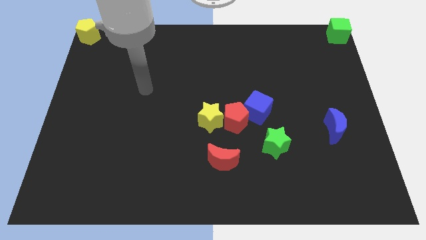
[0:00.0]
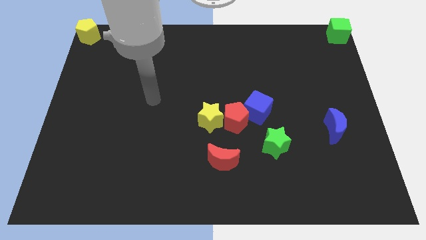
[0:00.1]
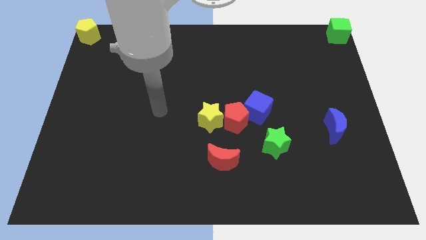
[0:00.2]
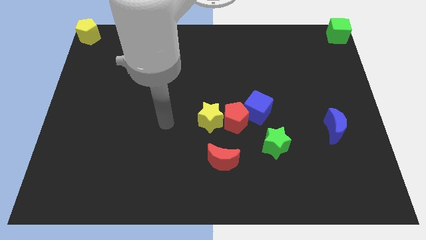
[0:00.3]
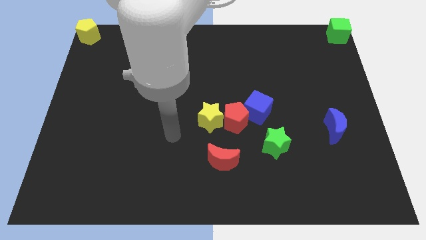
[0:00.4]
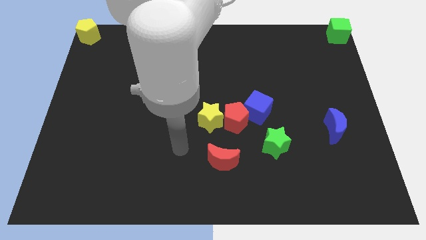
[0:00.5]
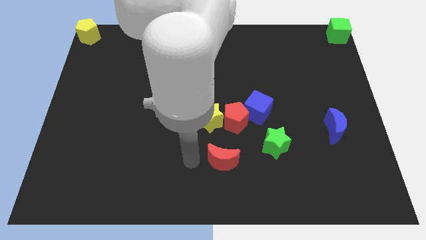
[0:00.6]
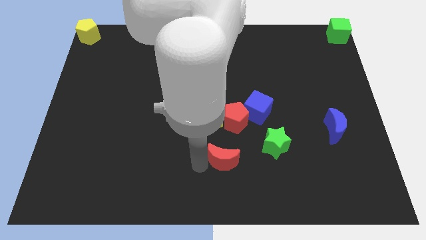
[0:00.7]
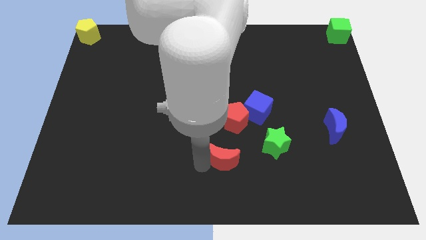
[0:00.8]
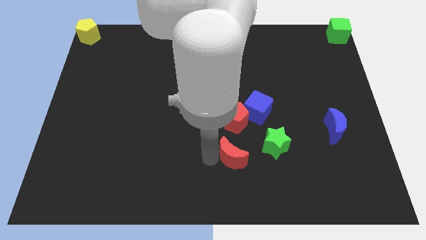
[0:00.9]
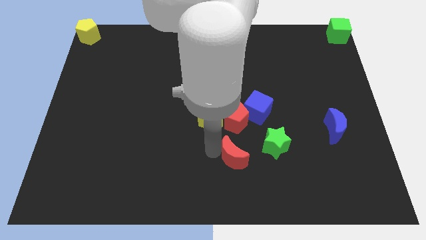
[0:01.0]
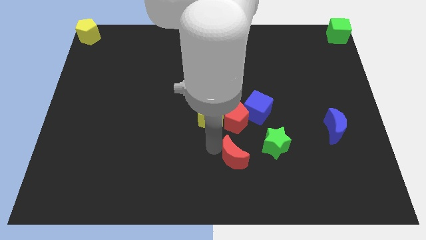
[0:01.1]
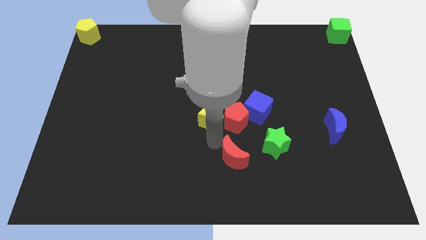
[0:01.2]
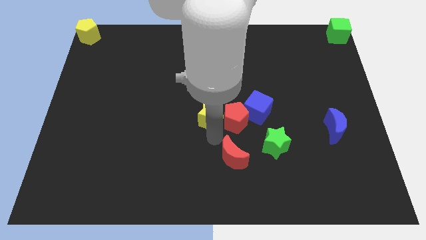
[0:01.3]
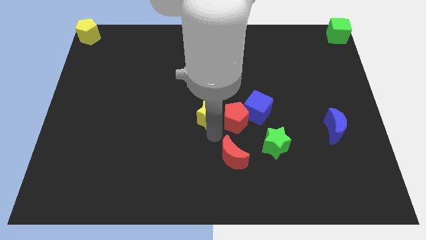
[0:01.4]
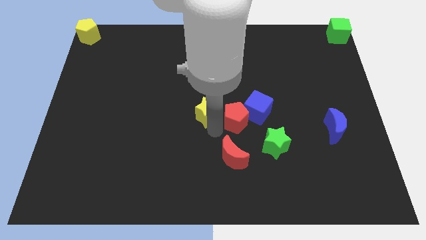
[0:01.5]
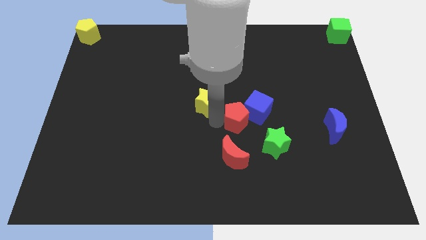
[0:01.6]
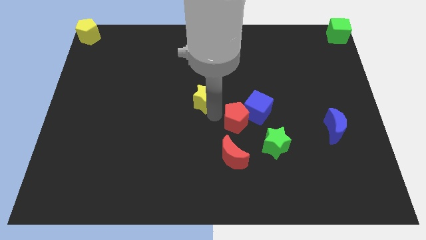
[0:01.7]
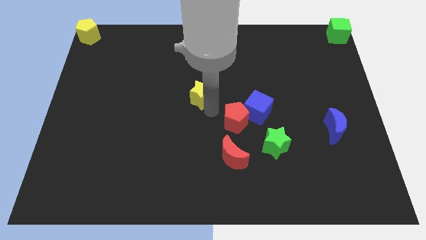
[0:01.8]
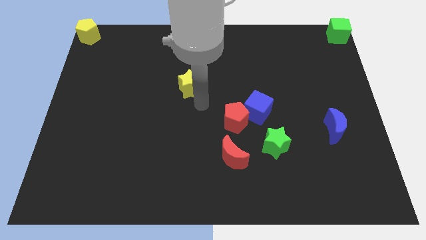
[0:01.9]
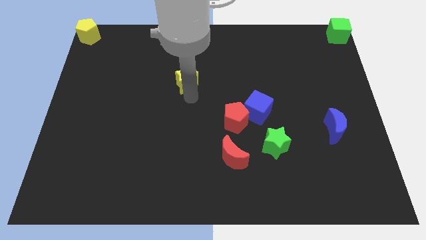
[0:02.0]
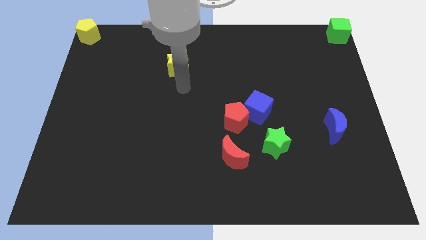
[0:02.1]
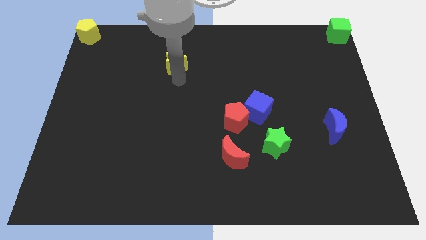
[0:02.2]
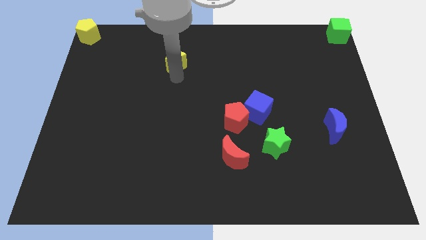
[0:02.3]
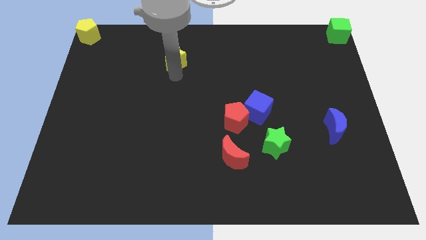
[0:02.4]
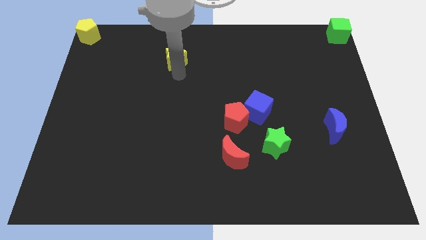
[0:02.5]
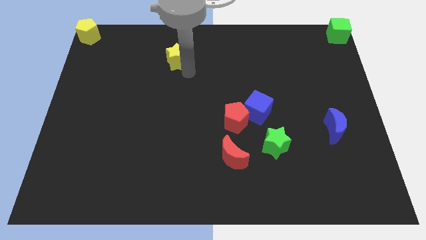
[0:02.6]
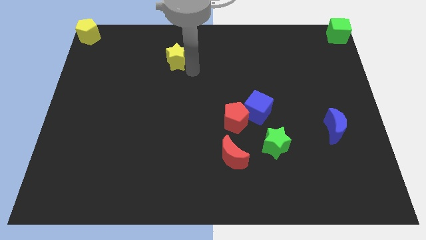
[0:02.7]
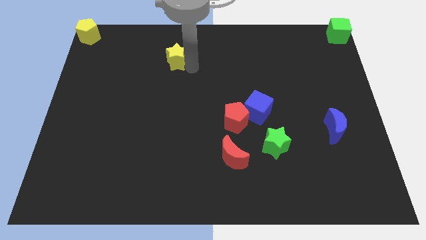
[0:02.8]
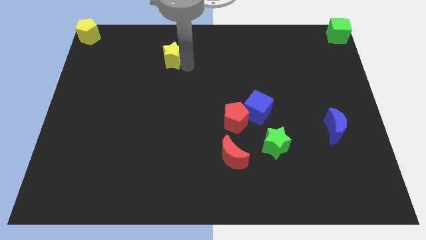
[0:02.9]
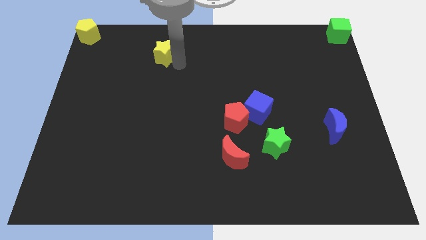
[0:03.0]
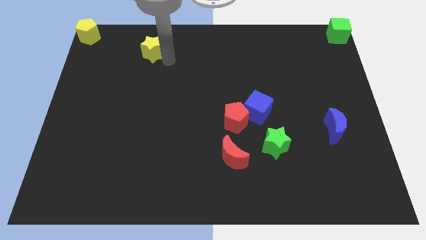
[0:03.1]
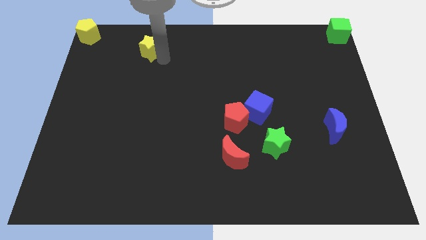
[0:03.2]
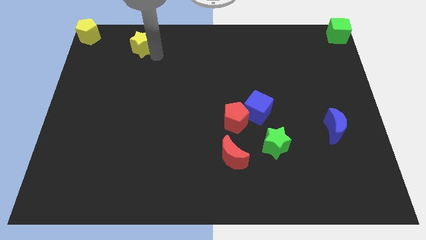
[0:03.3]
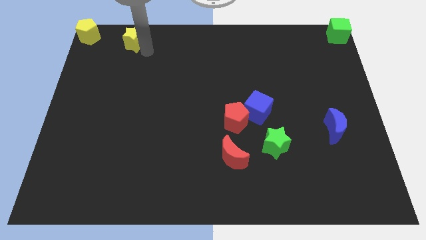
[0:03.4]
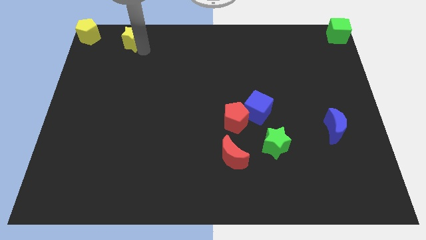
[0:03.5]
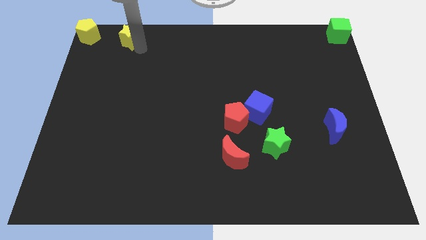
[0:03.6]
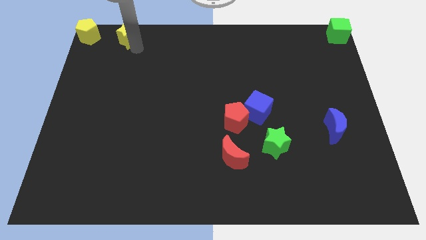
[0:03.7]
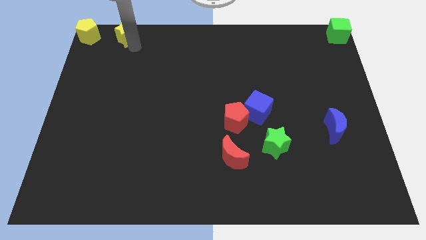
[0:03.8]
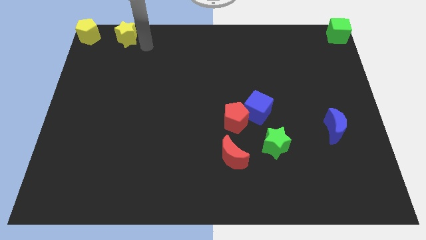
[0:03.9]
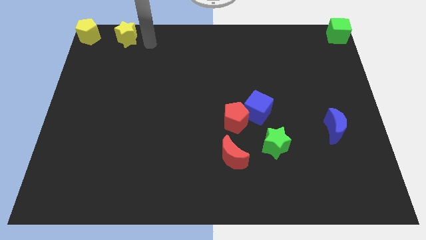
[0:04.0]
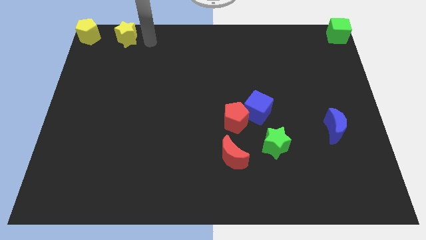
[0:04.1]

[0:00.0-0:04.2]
move the yellow star to the right of the yellow pentagon

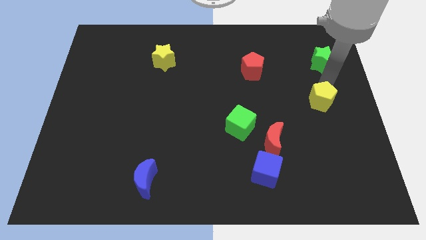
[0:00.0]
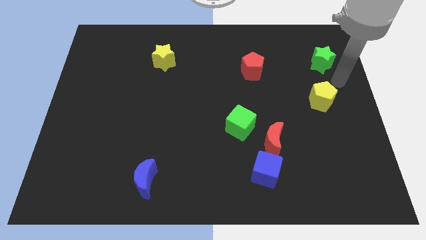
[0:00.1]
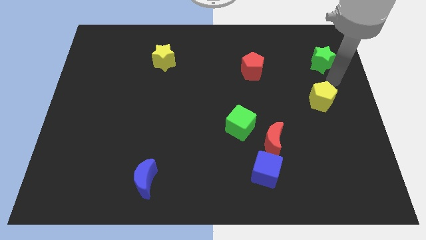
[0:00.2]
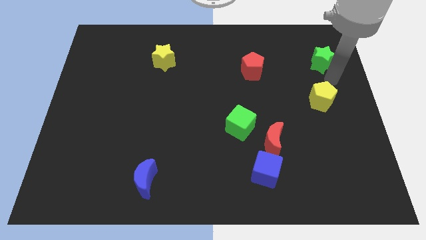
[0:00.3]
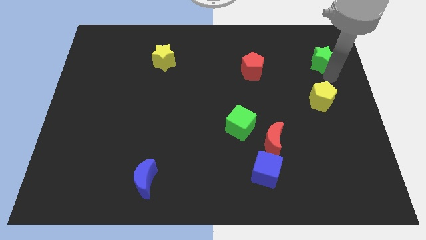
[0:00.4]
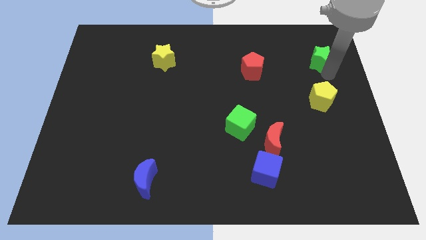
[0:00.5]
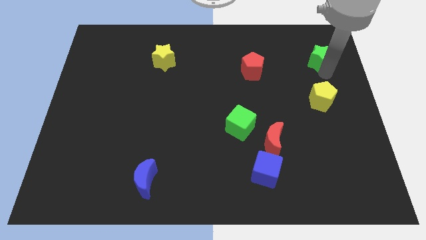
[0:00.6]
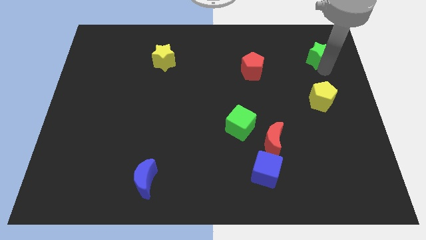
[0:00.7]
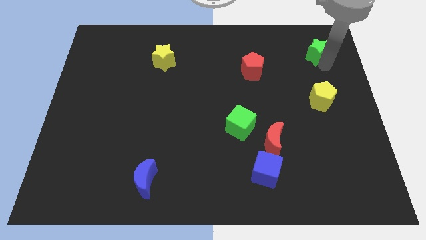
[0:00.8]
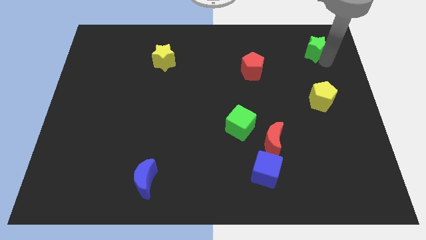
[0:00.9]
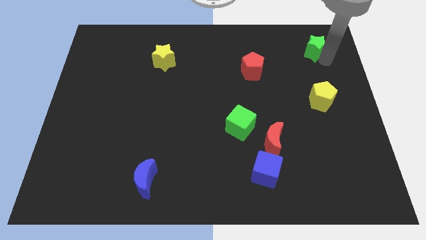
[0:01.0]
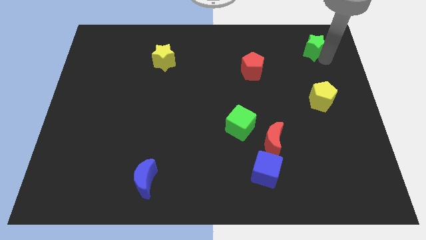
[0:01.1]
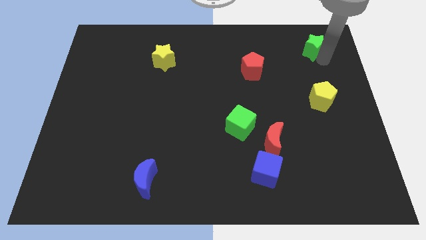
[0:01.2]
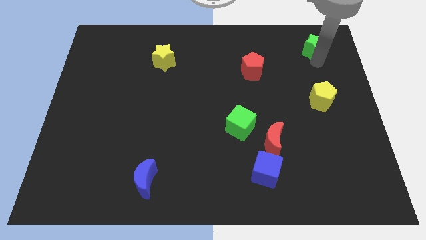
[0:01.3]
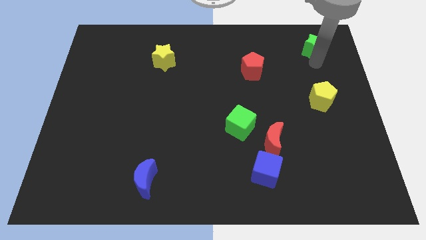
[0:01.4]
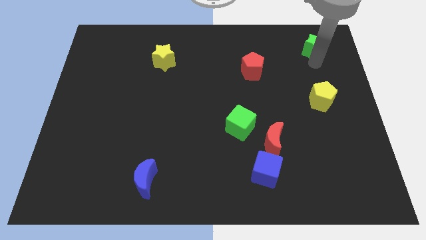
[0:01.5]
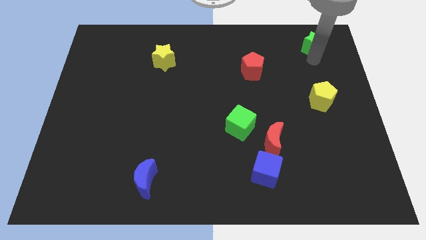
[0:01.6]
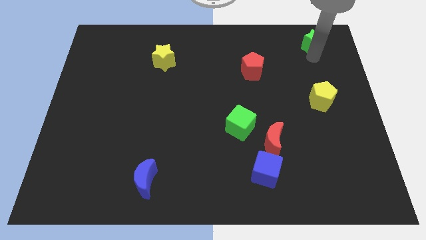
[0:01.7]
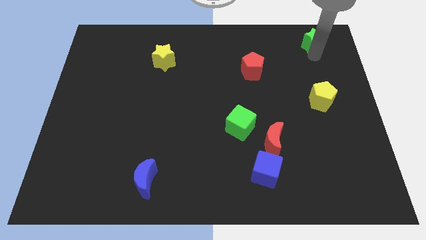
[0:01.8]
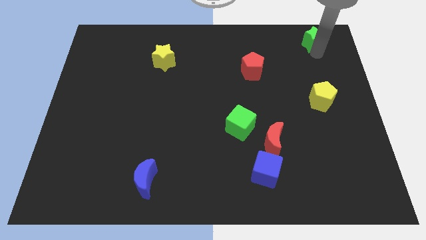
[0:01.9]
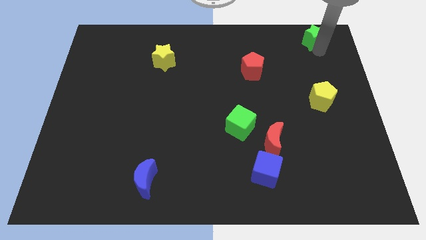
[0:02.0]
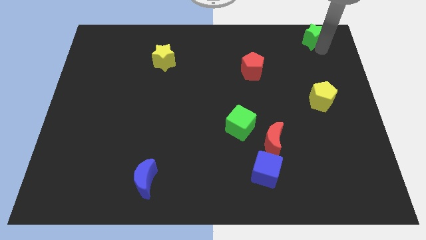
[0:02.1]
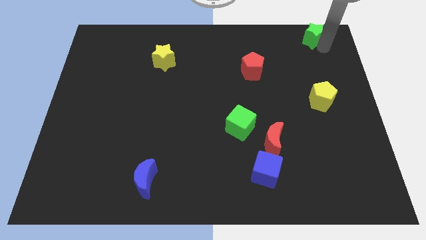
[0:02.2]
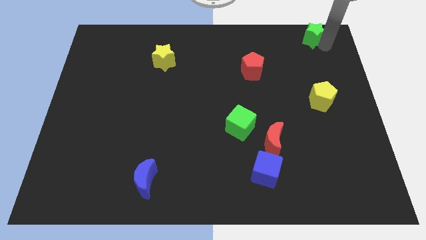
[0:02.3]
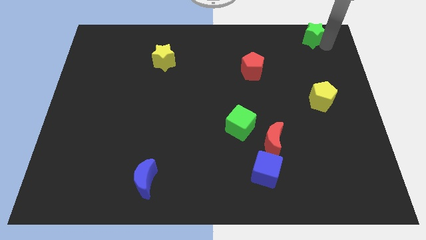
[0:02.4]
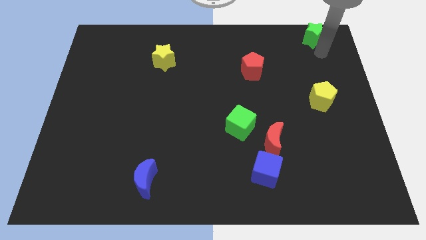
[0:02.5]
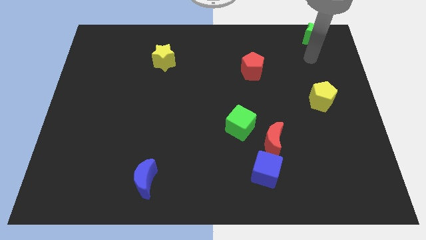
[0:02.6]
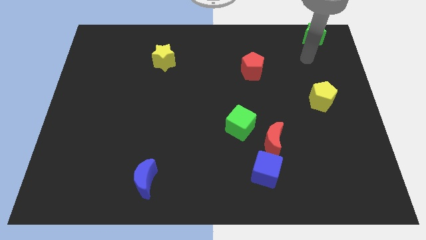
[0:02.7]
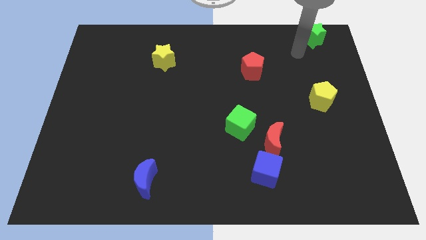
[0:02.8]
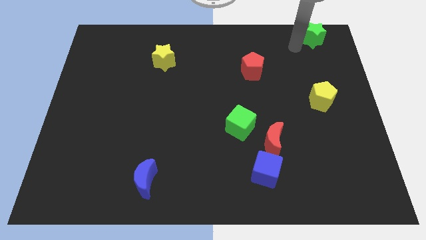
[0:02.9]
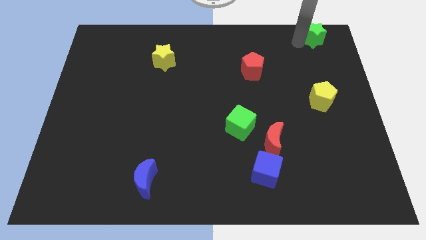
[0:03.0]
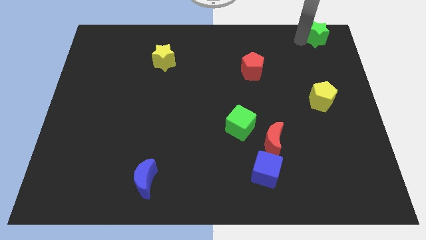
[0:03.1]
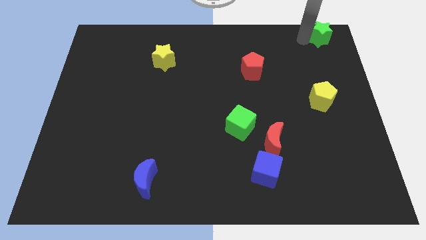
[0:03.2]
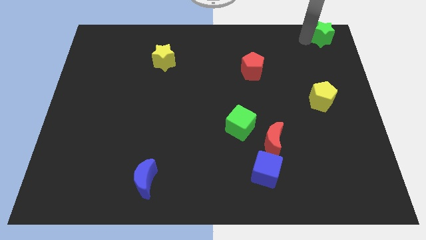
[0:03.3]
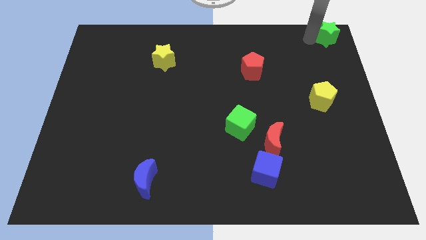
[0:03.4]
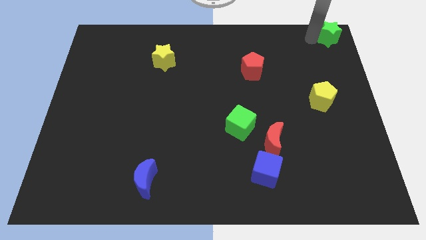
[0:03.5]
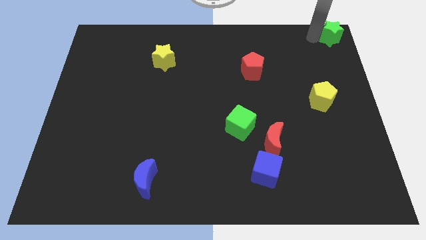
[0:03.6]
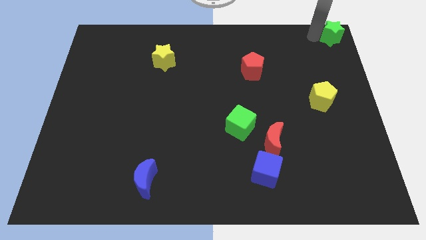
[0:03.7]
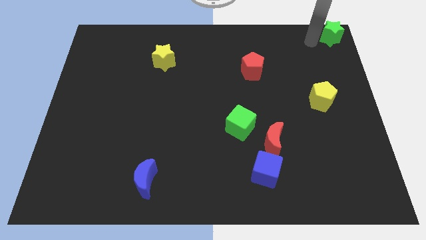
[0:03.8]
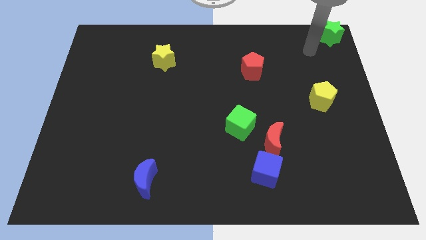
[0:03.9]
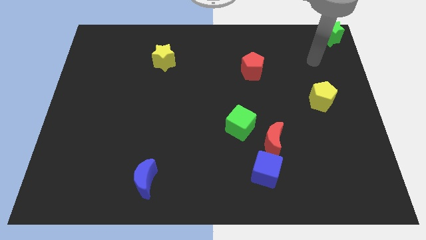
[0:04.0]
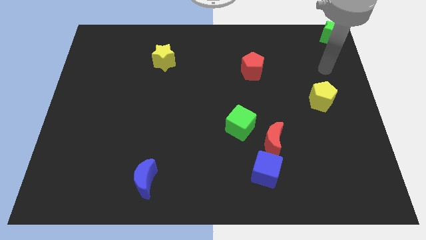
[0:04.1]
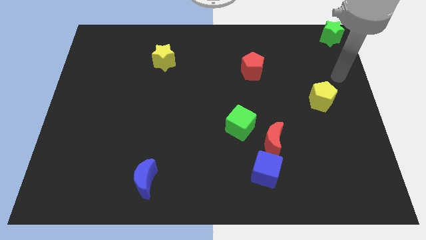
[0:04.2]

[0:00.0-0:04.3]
place the green star to the top right

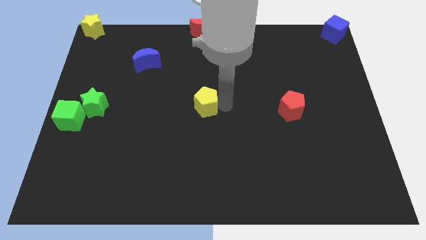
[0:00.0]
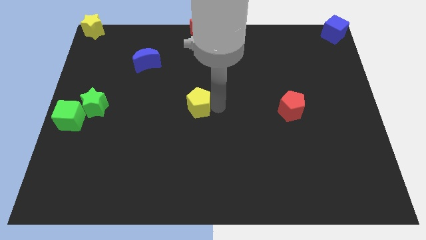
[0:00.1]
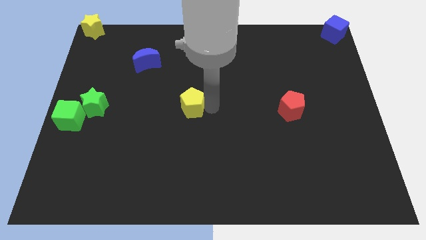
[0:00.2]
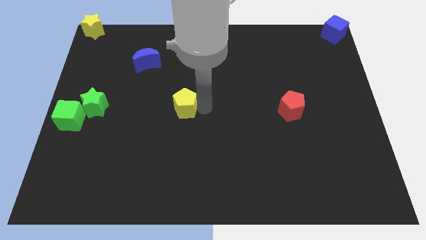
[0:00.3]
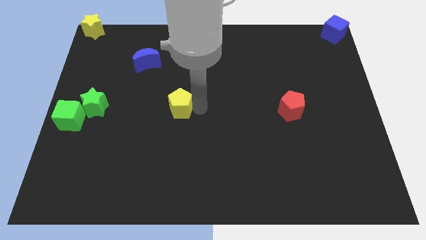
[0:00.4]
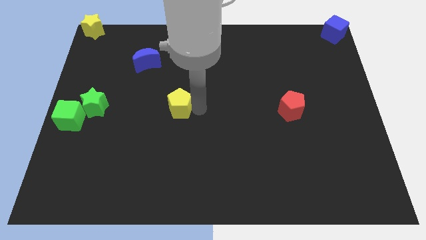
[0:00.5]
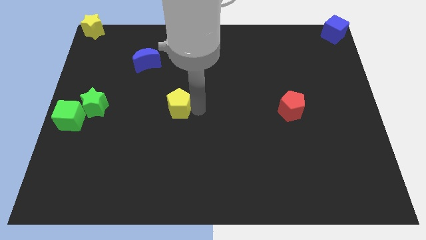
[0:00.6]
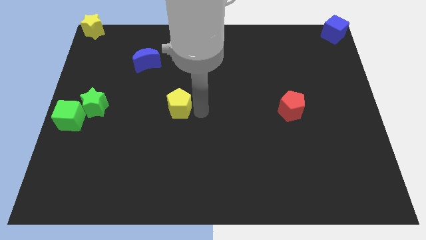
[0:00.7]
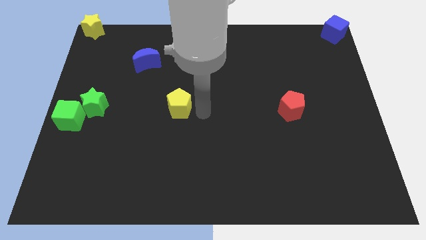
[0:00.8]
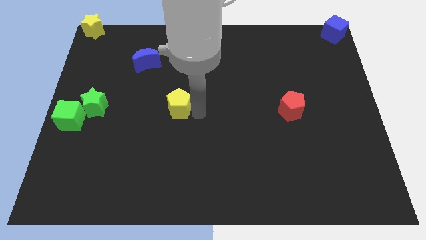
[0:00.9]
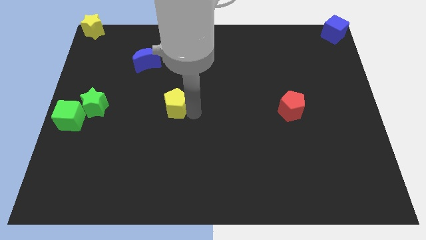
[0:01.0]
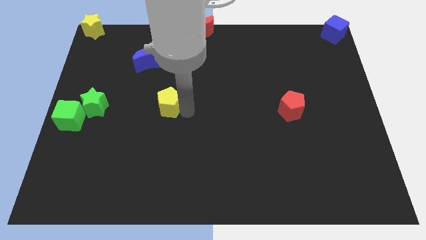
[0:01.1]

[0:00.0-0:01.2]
push the yellow pentagon parallel to green star
